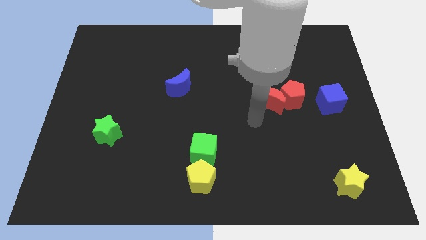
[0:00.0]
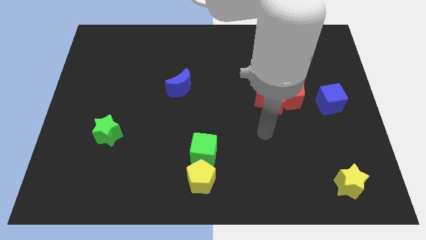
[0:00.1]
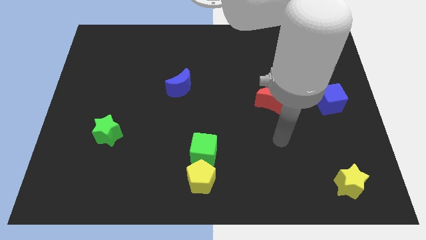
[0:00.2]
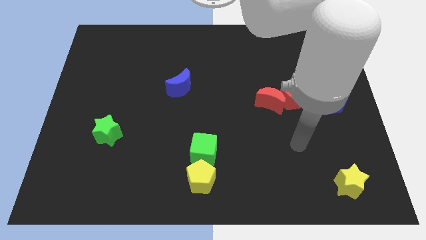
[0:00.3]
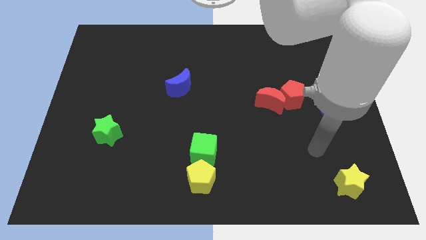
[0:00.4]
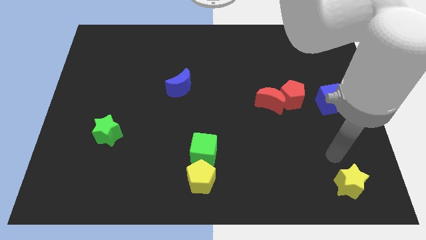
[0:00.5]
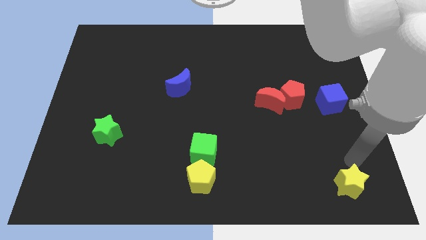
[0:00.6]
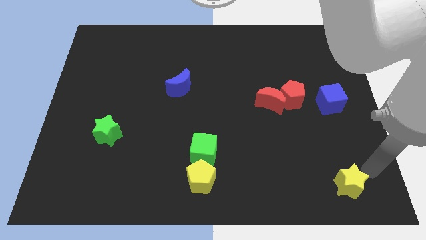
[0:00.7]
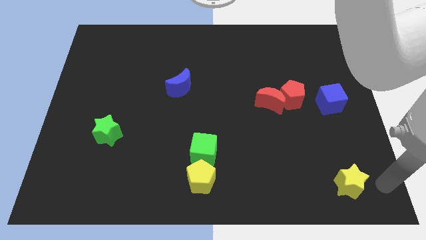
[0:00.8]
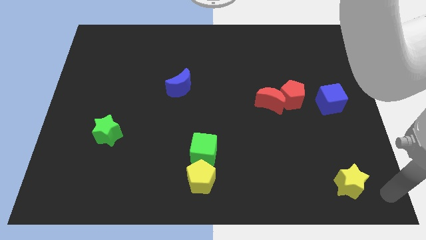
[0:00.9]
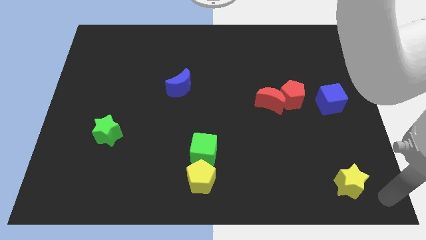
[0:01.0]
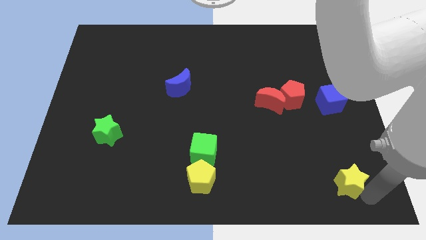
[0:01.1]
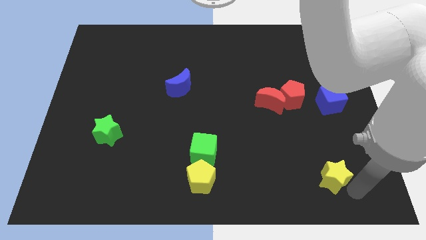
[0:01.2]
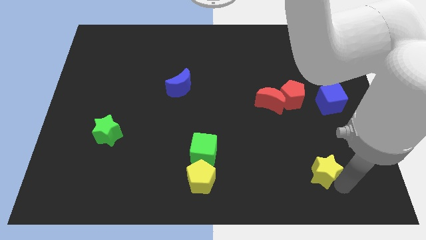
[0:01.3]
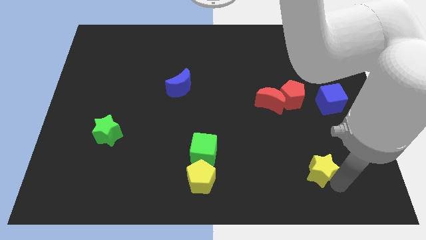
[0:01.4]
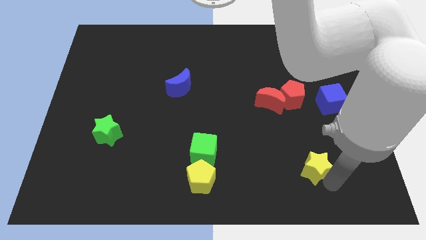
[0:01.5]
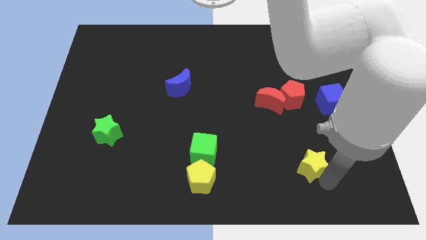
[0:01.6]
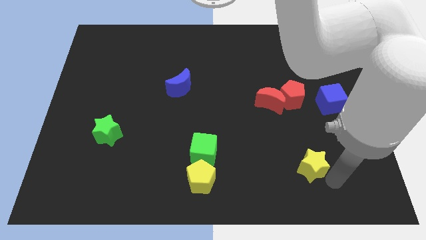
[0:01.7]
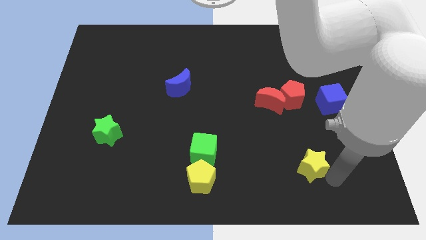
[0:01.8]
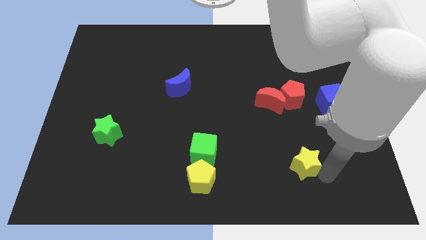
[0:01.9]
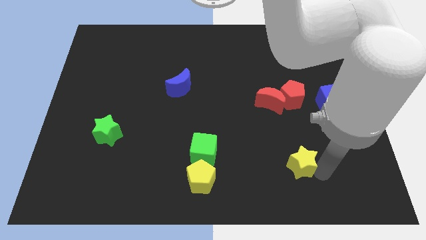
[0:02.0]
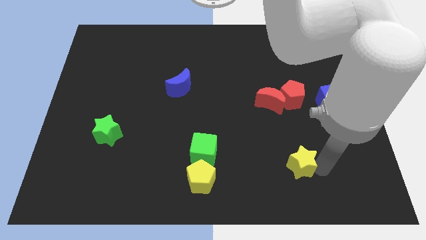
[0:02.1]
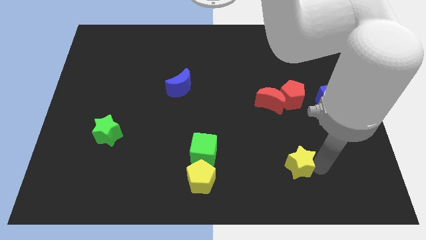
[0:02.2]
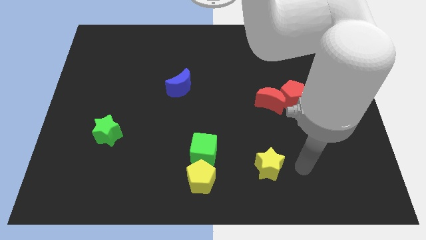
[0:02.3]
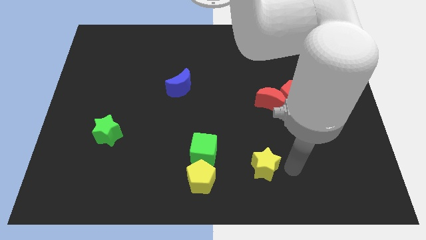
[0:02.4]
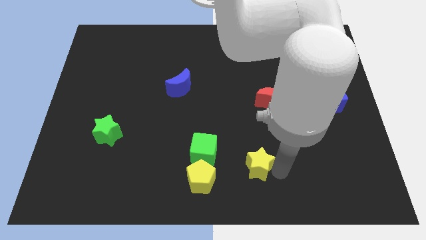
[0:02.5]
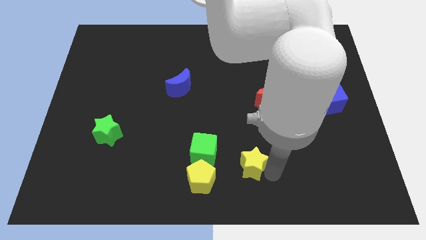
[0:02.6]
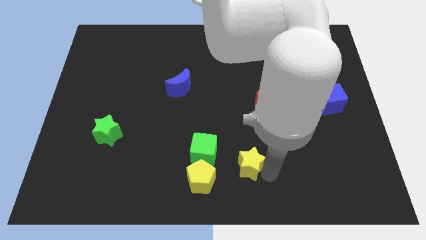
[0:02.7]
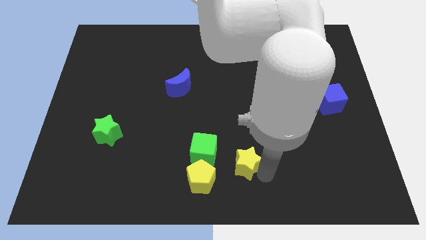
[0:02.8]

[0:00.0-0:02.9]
move the yellow star to the right of the green cube and the yellow pentagon

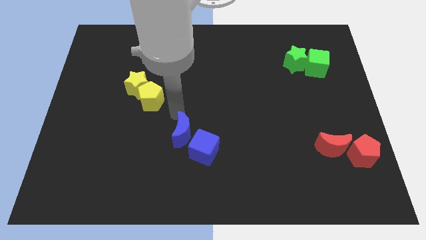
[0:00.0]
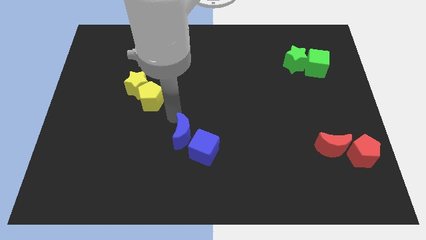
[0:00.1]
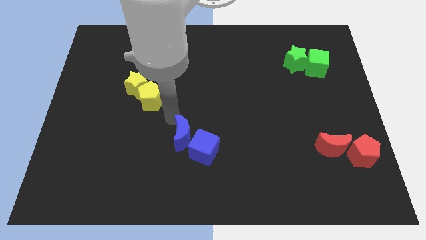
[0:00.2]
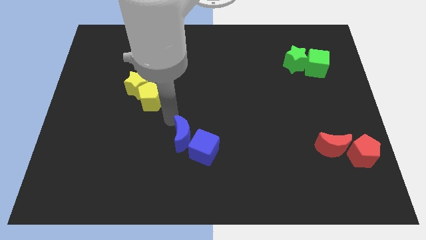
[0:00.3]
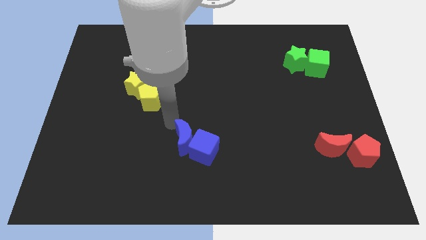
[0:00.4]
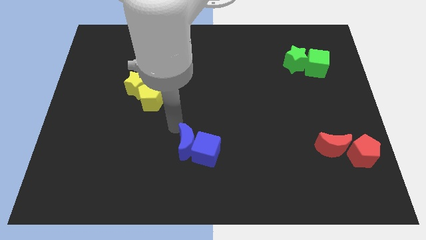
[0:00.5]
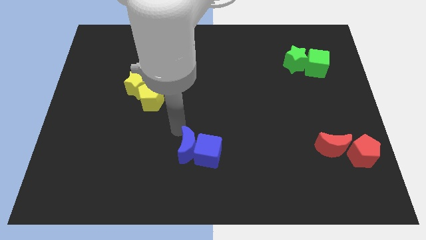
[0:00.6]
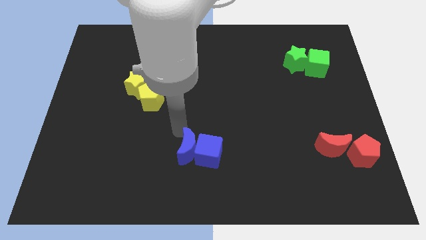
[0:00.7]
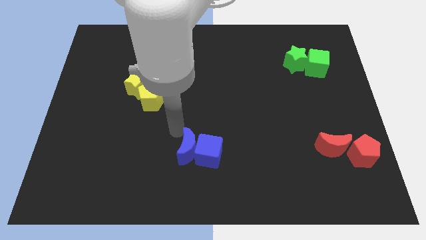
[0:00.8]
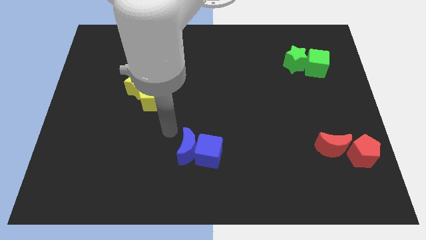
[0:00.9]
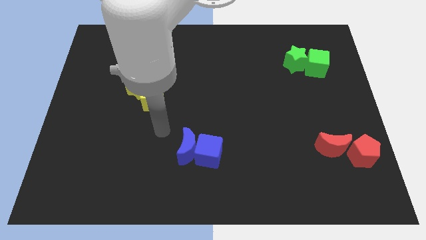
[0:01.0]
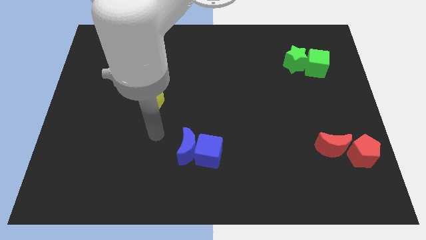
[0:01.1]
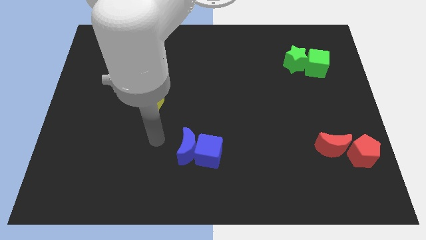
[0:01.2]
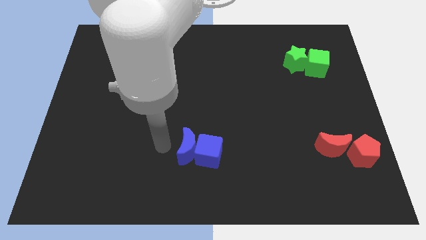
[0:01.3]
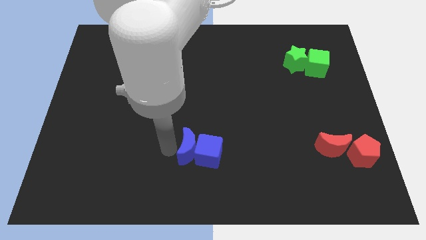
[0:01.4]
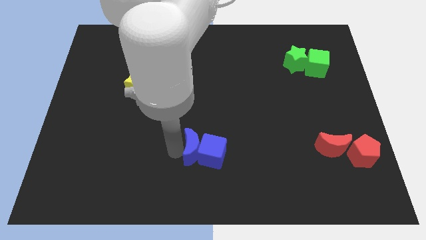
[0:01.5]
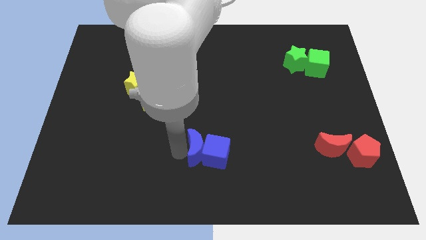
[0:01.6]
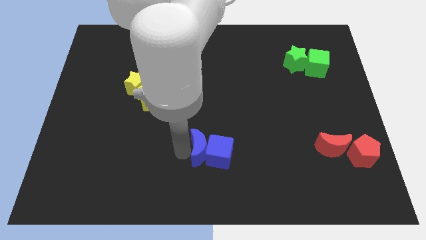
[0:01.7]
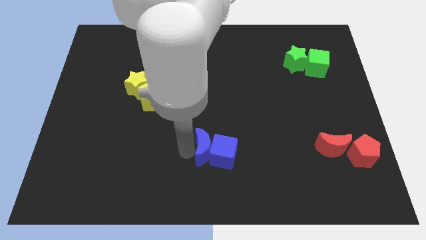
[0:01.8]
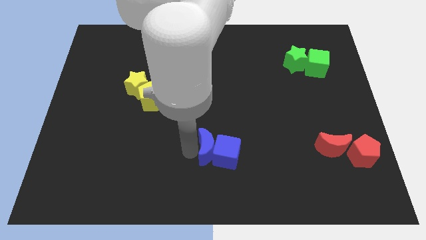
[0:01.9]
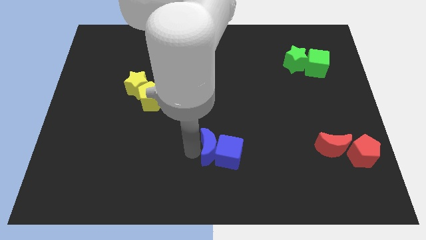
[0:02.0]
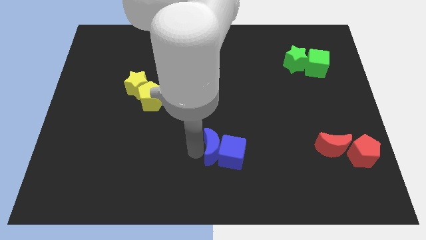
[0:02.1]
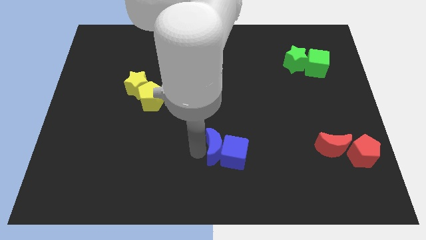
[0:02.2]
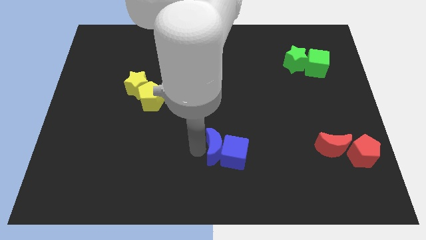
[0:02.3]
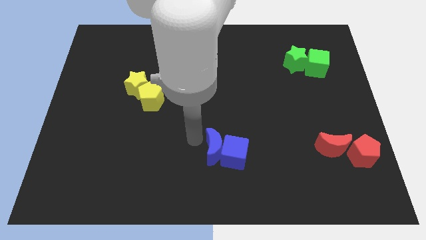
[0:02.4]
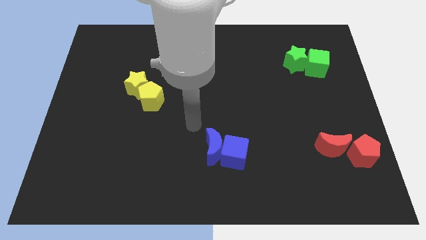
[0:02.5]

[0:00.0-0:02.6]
push the blue moon into the blue cube

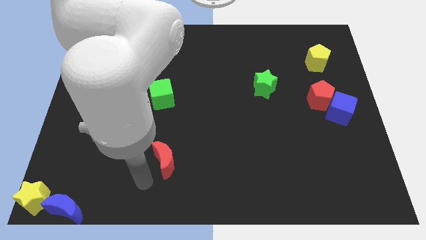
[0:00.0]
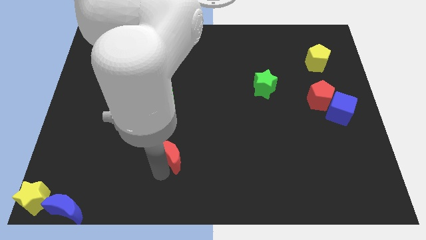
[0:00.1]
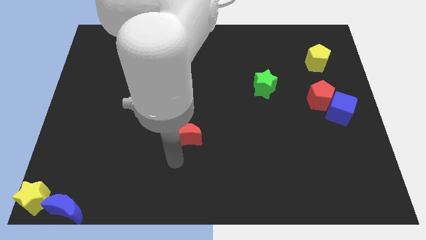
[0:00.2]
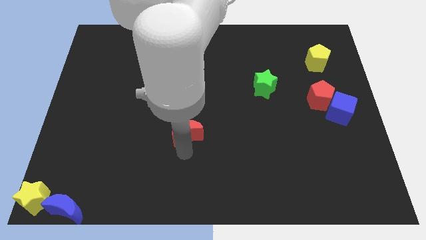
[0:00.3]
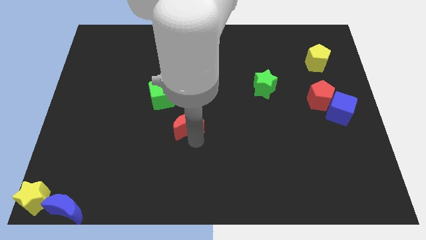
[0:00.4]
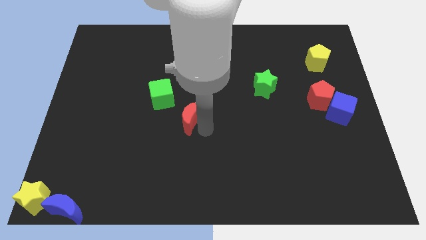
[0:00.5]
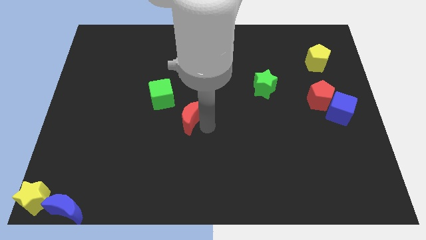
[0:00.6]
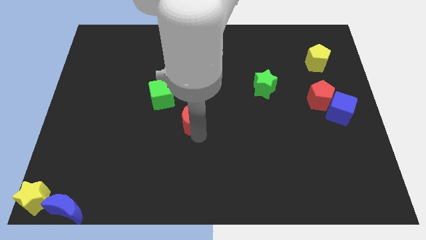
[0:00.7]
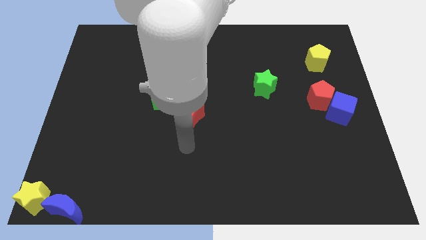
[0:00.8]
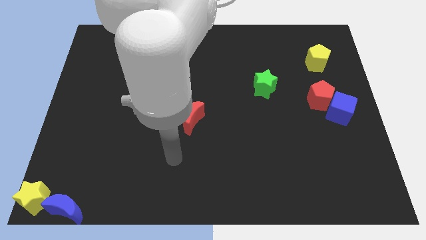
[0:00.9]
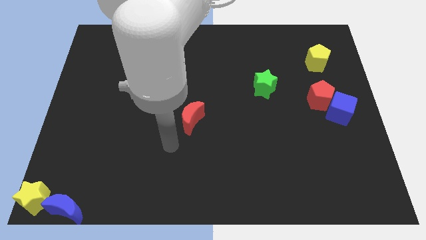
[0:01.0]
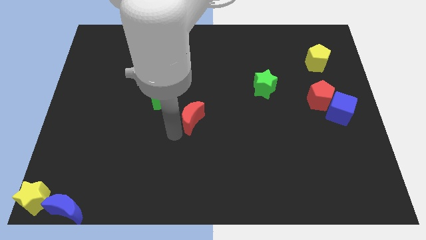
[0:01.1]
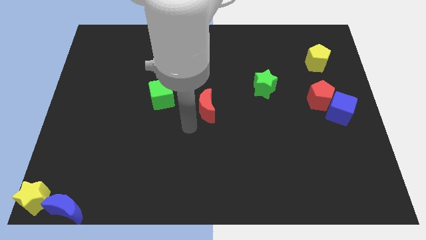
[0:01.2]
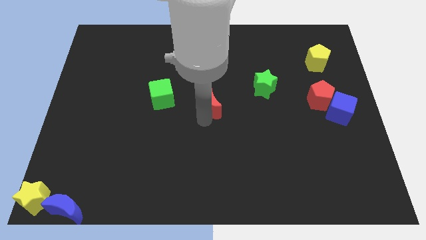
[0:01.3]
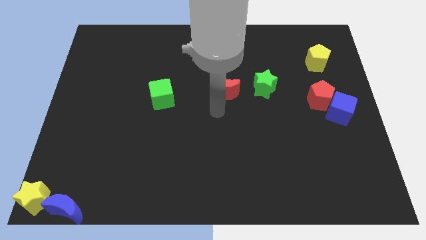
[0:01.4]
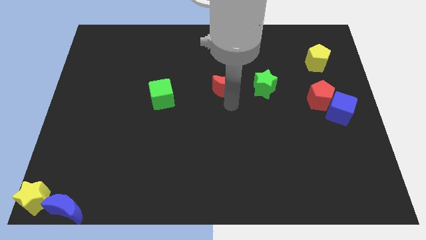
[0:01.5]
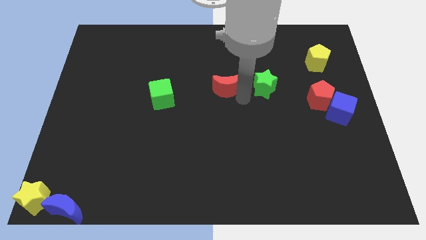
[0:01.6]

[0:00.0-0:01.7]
push the red crescent left to the green star

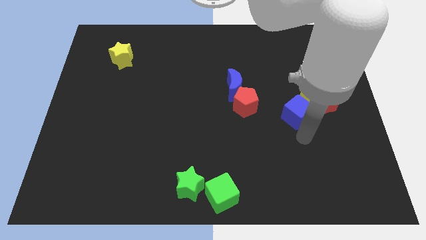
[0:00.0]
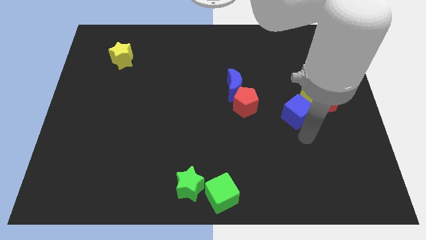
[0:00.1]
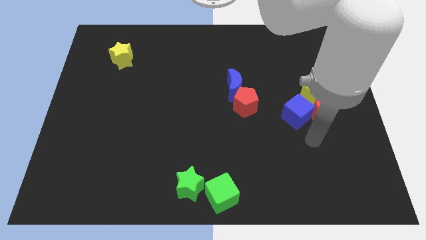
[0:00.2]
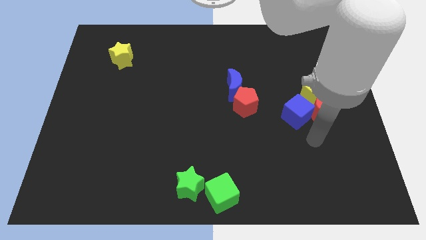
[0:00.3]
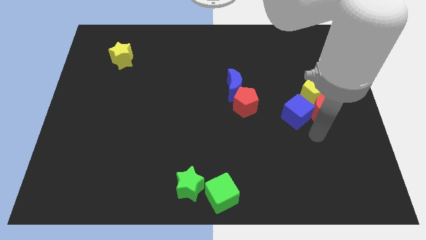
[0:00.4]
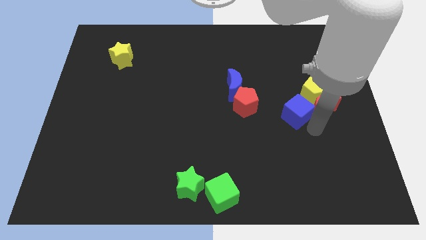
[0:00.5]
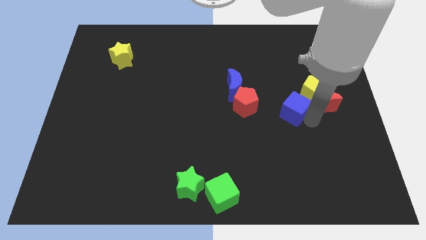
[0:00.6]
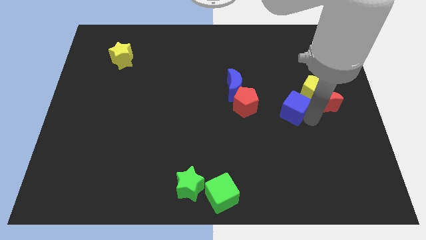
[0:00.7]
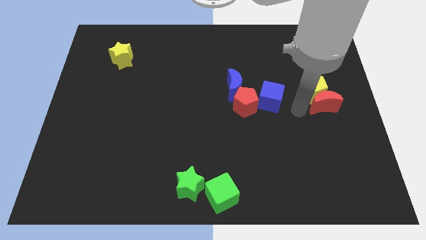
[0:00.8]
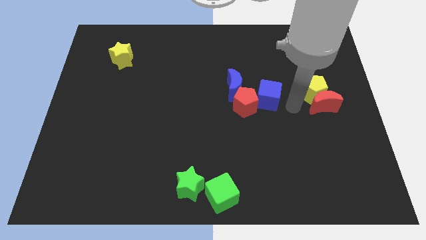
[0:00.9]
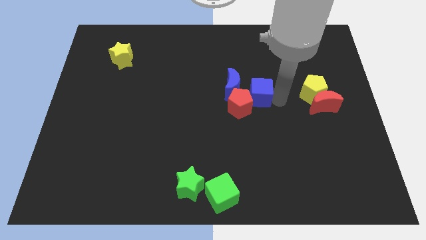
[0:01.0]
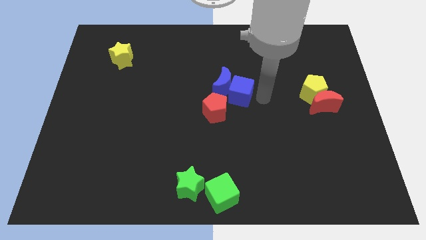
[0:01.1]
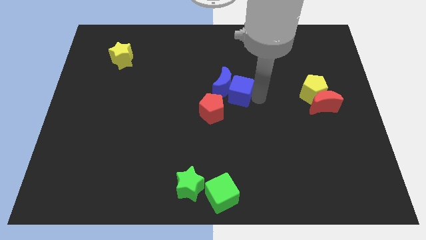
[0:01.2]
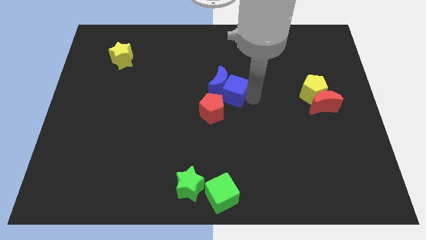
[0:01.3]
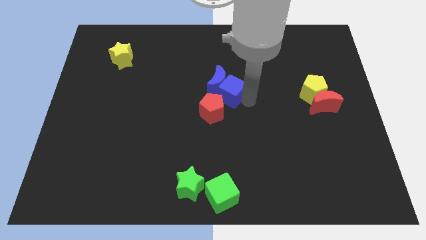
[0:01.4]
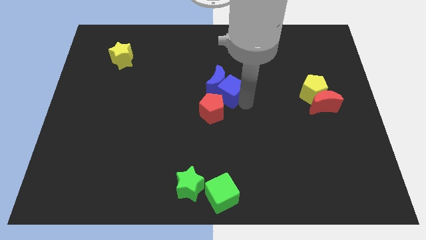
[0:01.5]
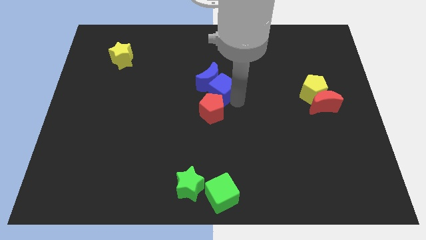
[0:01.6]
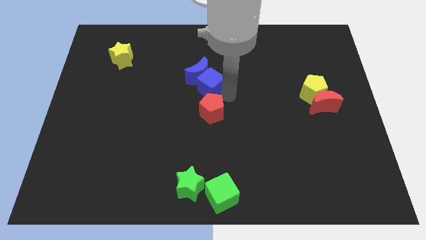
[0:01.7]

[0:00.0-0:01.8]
move the blue cube into the blue moon

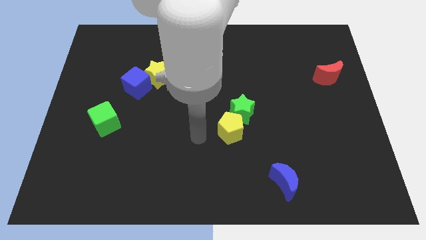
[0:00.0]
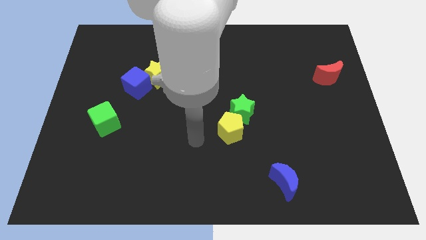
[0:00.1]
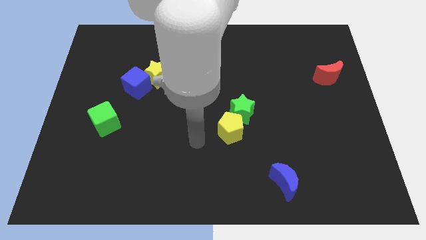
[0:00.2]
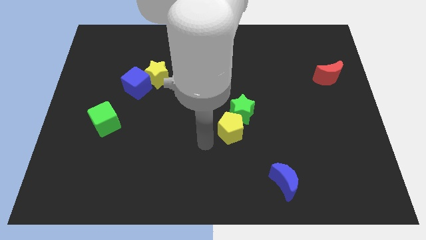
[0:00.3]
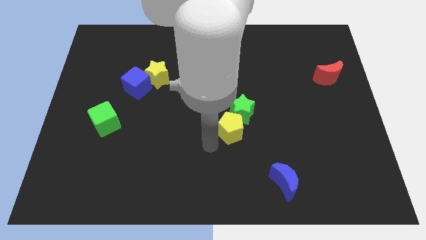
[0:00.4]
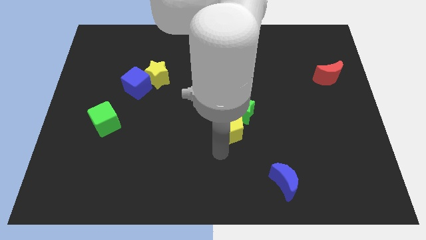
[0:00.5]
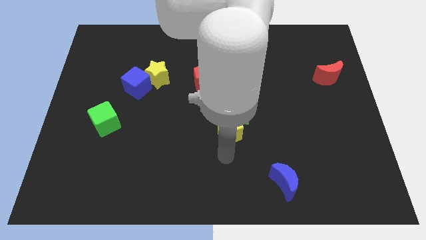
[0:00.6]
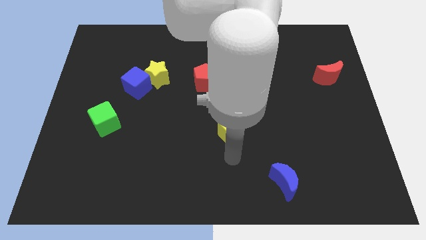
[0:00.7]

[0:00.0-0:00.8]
point your arm at the bottom of yellow pentagon
